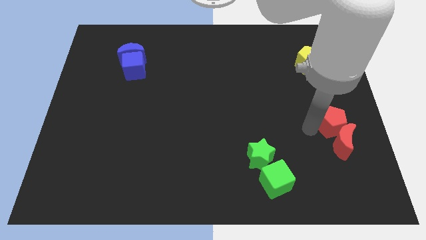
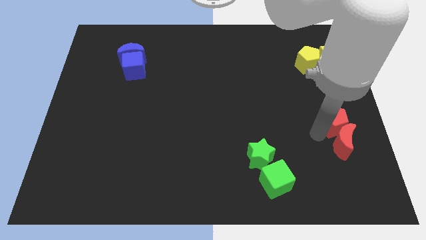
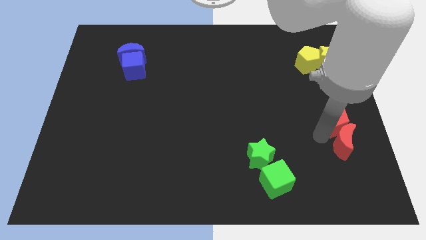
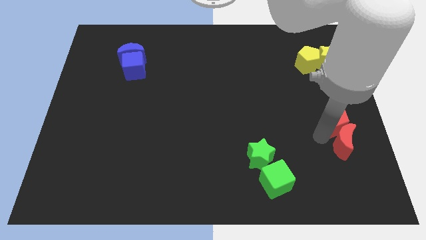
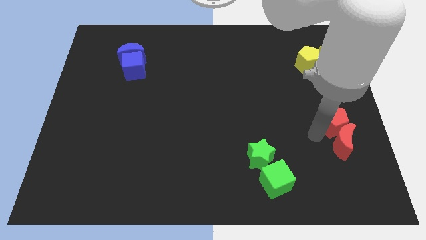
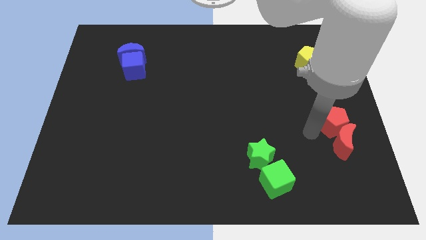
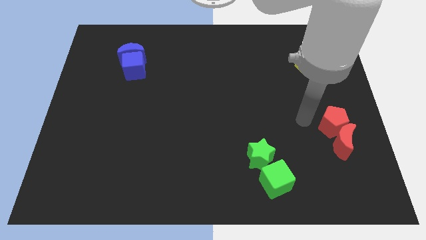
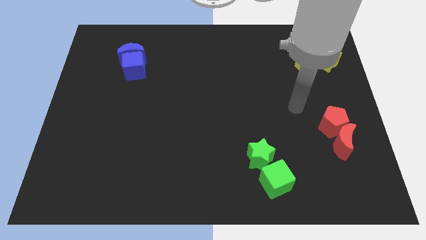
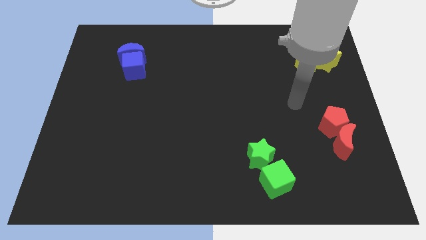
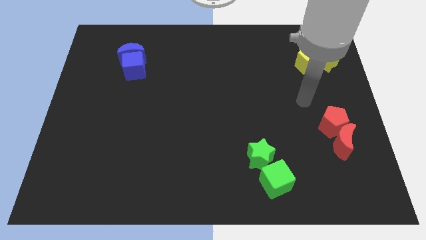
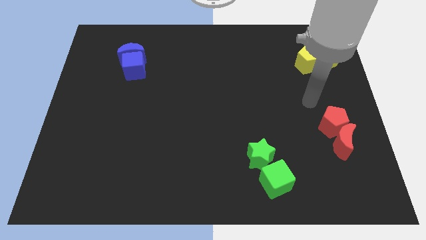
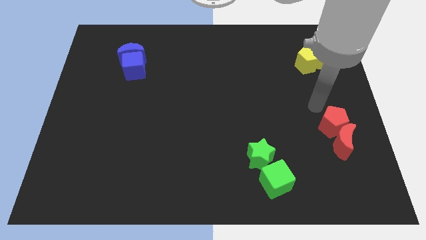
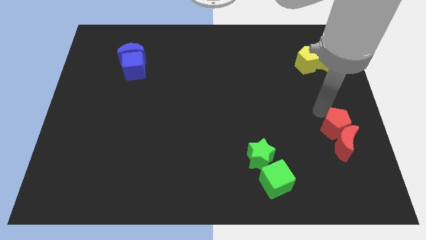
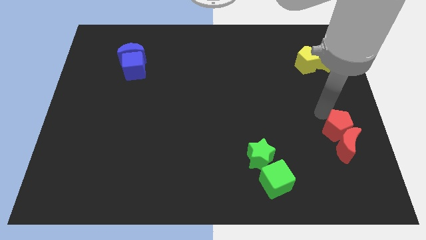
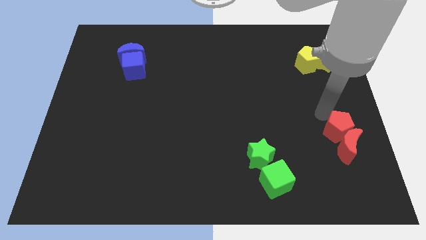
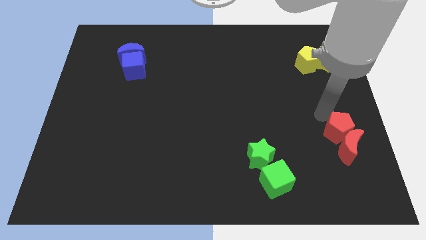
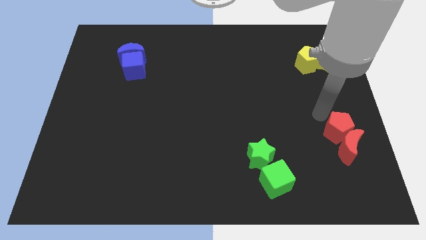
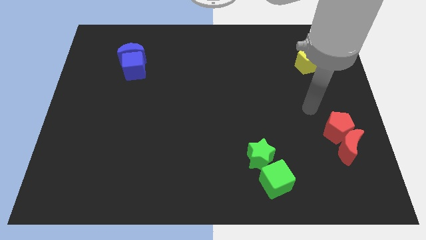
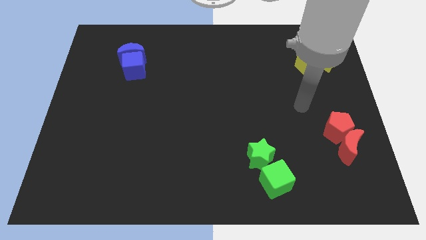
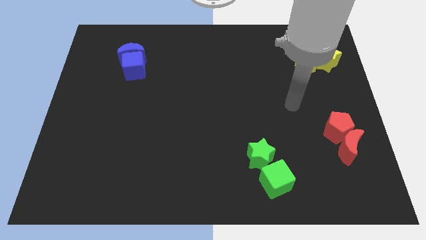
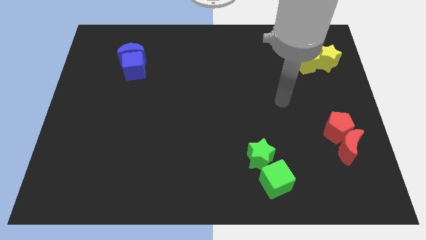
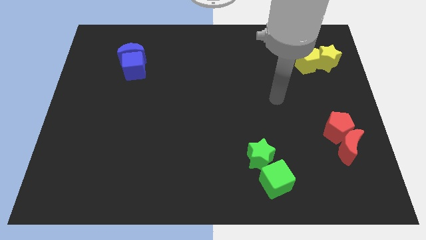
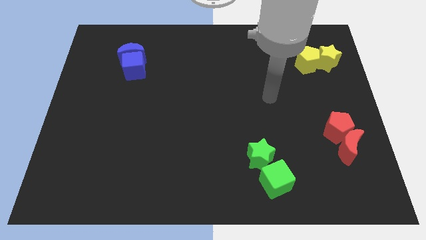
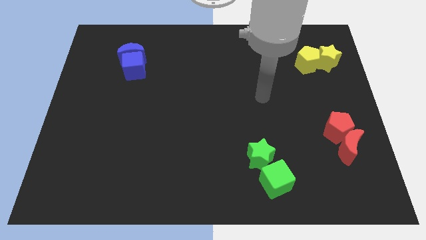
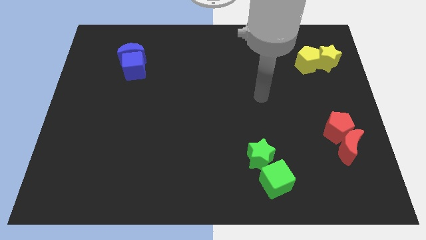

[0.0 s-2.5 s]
move your arm away from the red pentagon

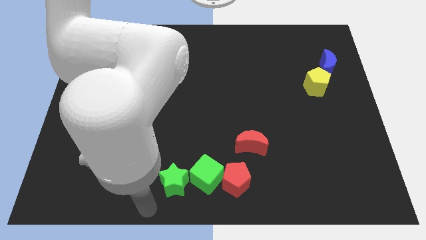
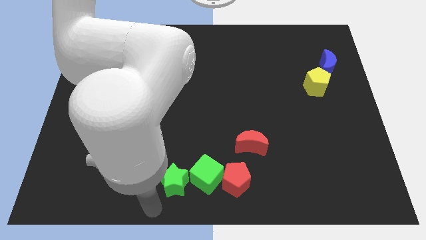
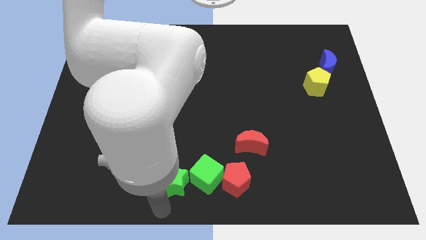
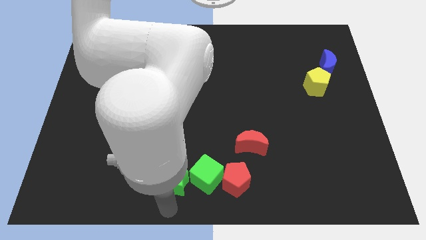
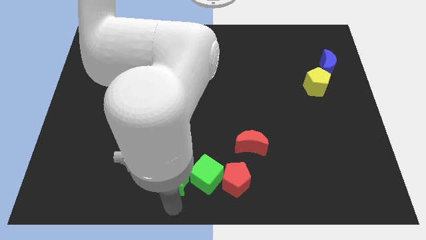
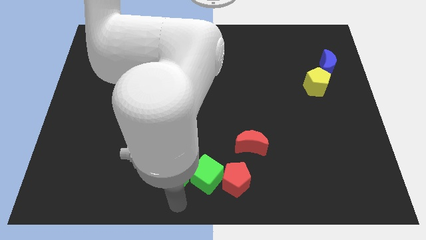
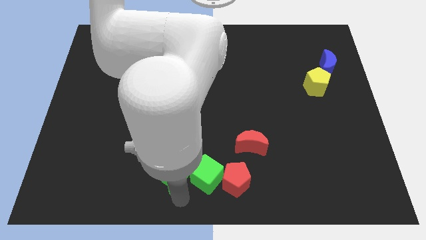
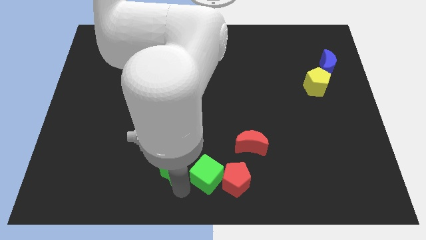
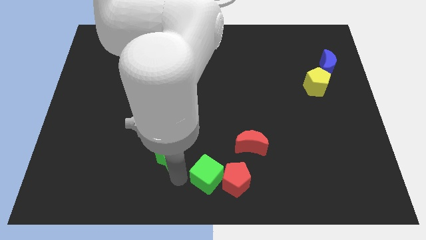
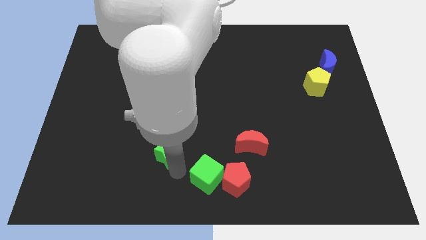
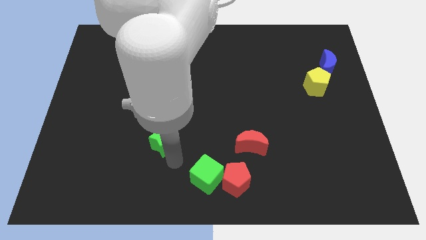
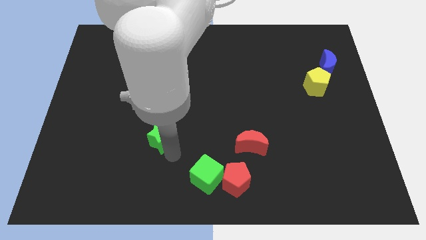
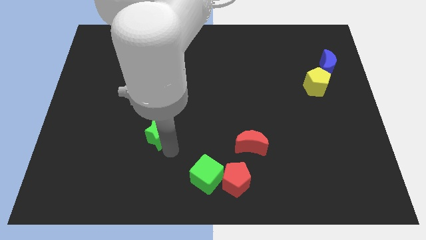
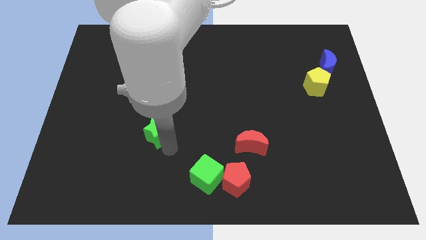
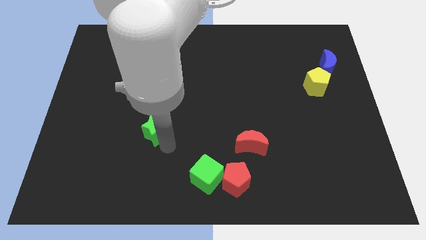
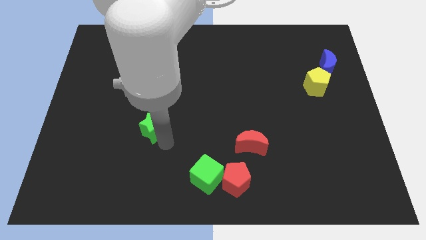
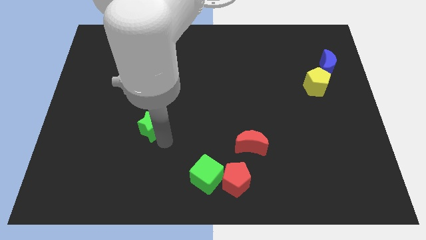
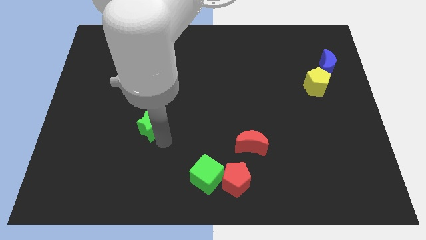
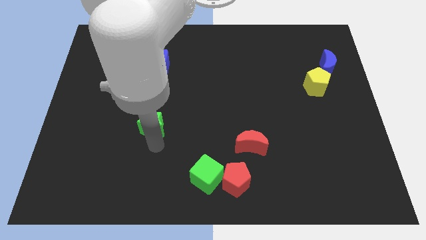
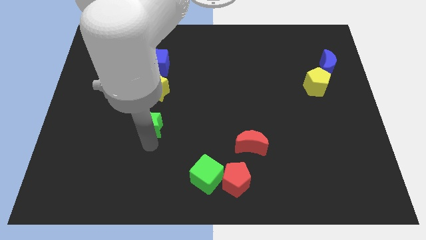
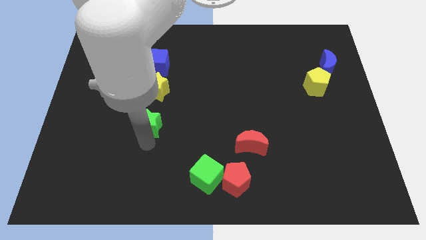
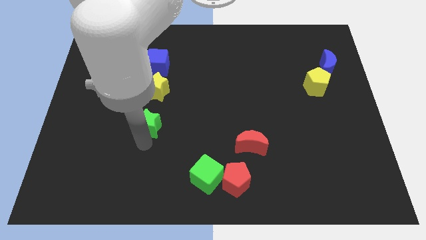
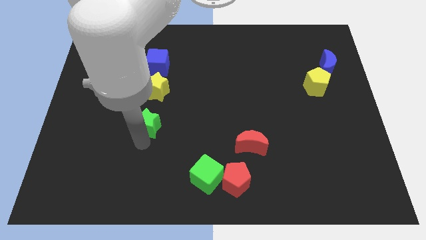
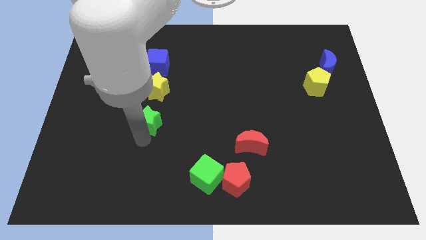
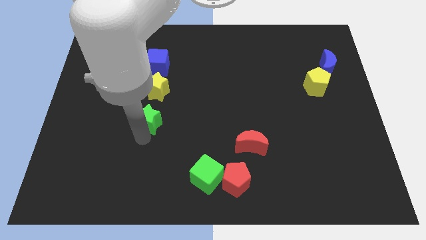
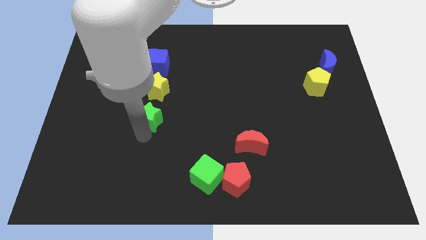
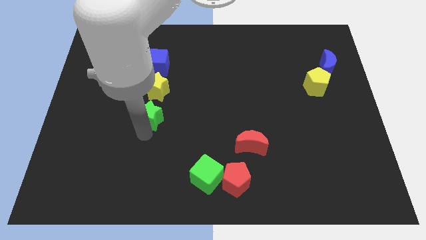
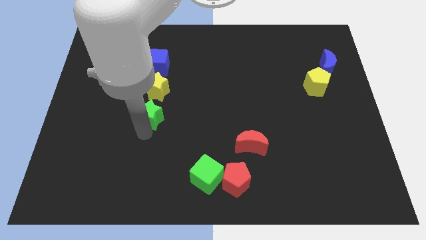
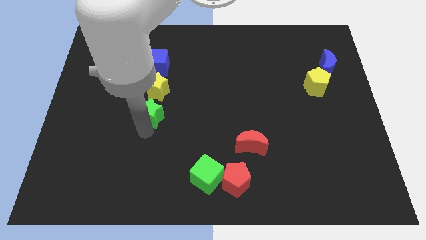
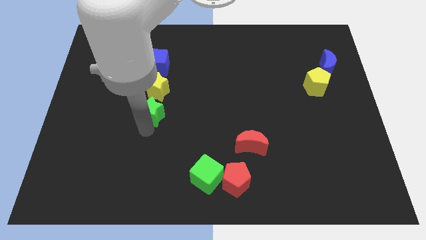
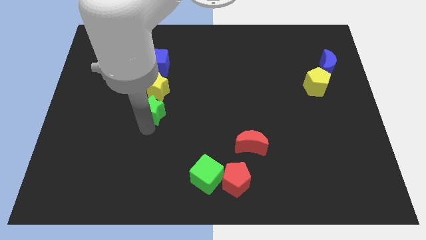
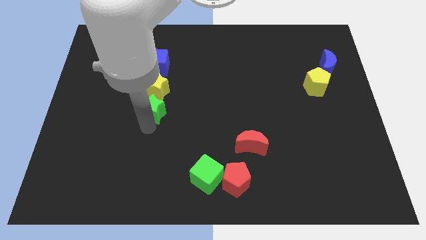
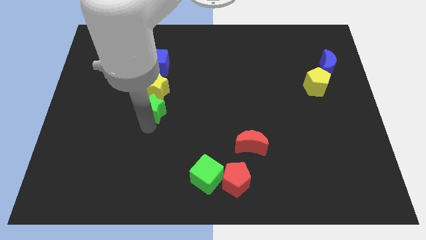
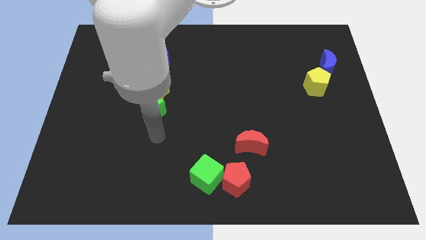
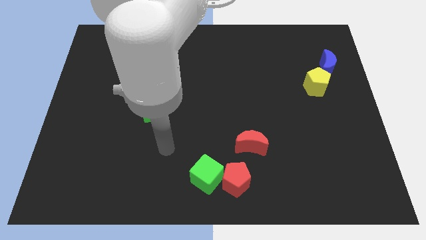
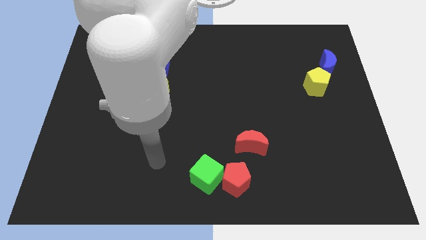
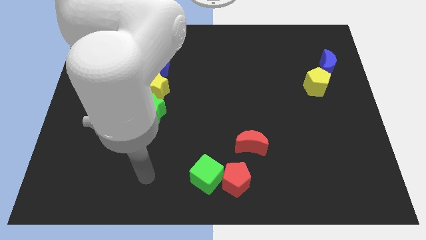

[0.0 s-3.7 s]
slide the green star close to the bottom of the yellow star

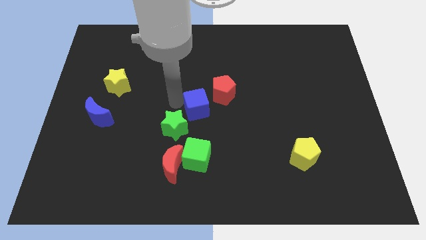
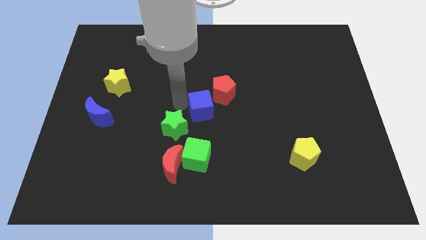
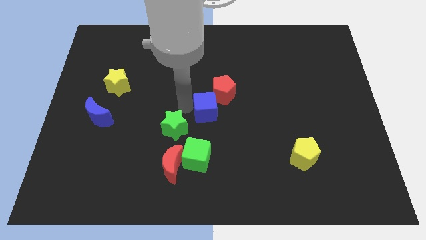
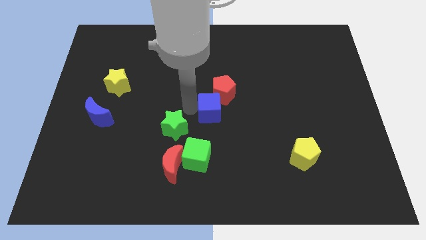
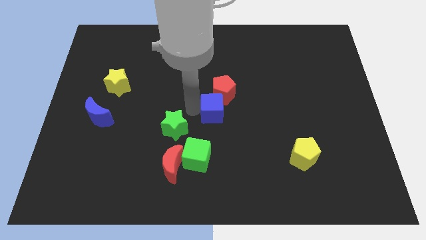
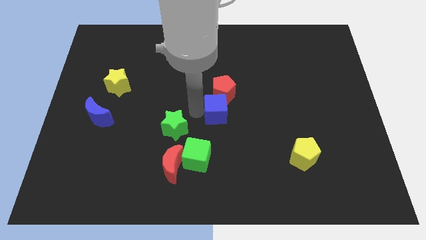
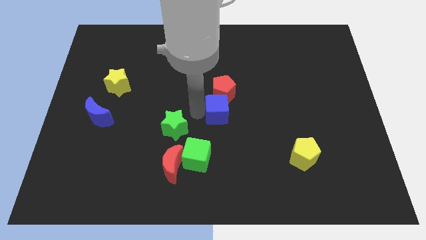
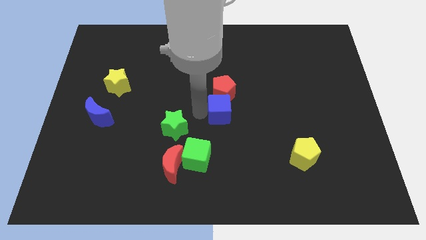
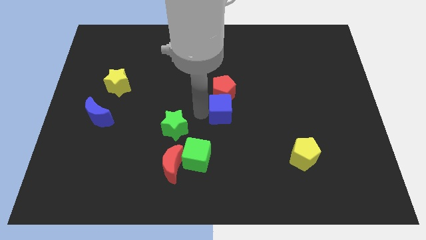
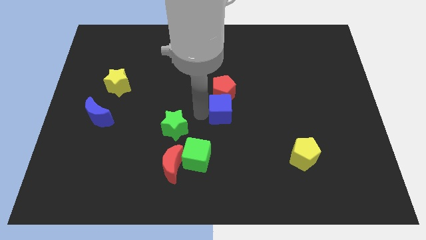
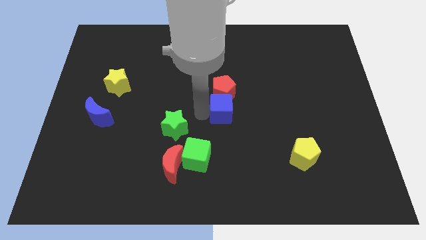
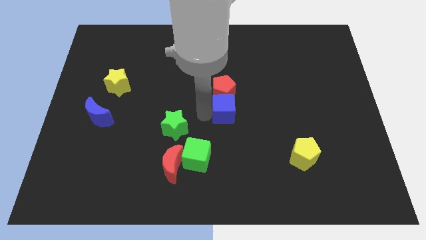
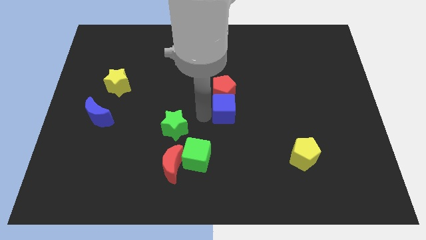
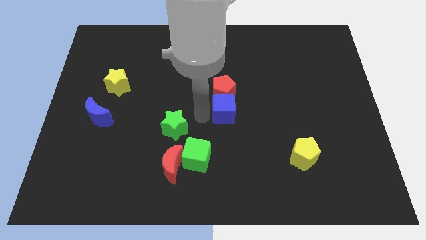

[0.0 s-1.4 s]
place the blue cube at the bottom of the red pentagon

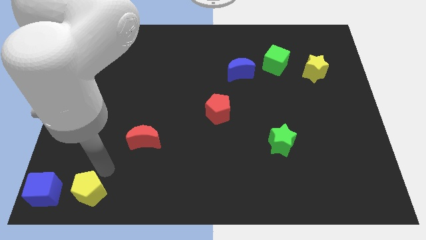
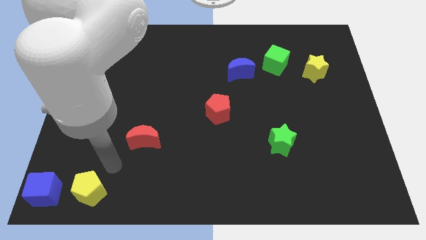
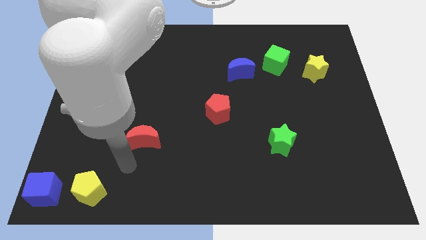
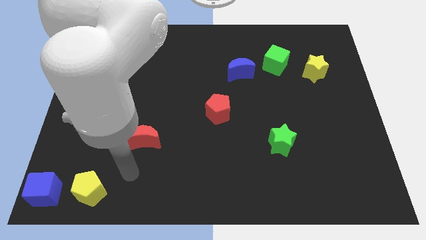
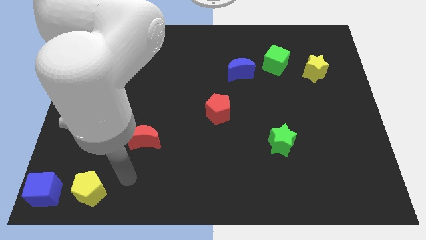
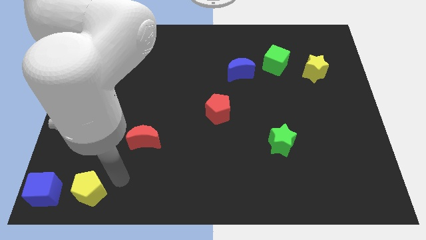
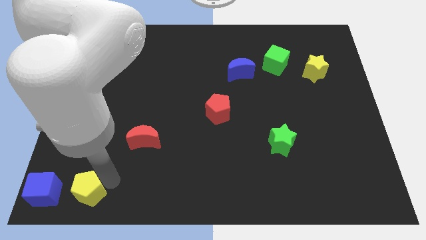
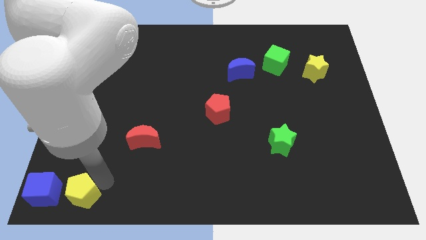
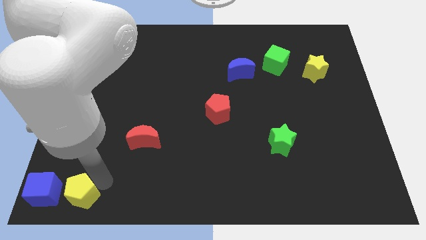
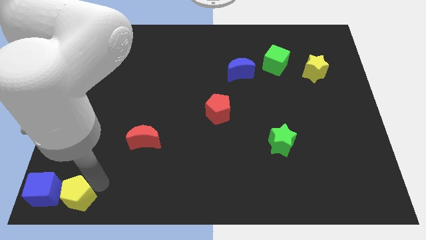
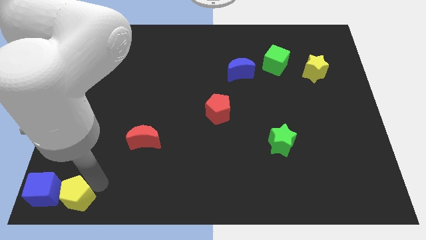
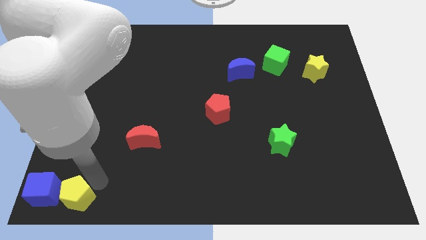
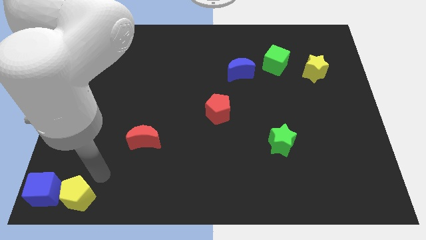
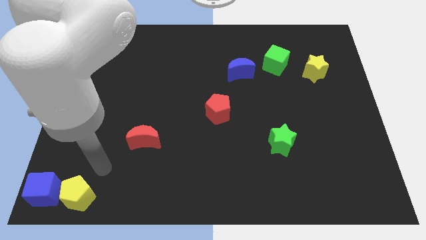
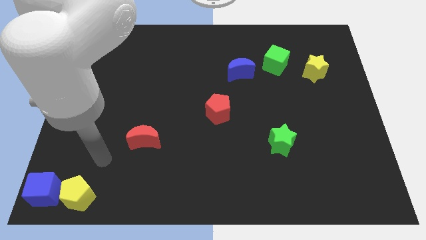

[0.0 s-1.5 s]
place the yellow pentagon towards the right to the blue cube
